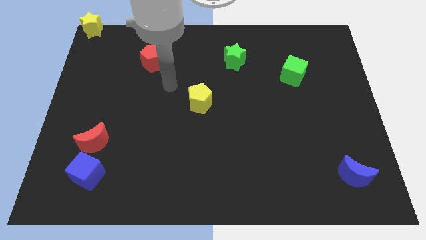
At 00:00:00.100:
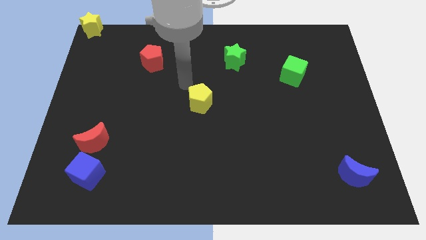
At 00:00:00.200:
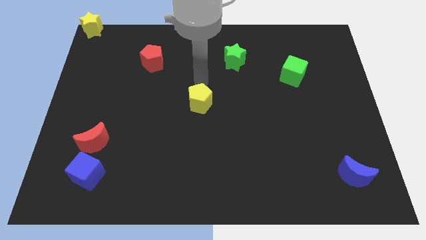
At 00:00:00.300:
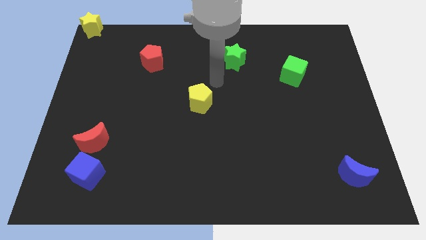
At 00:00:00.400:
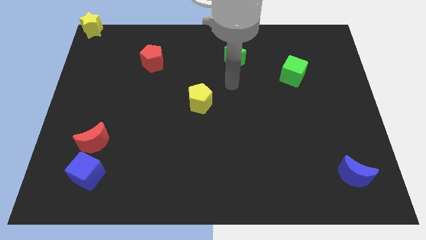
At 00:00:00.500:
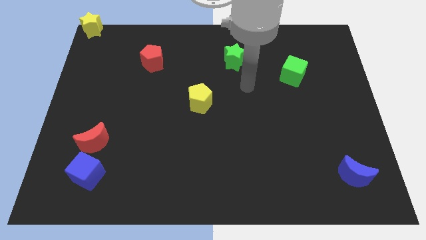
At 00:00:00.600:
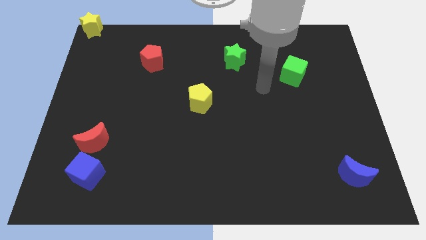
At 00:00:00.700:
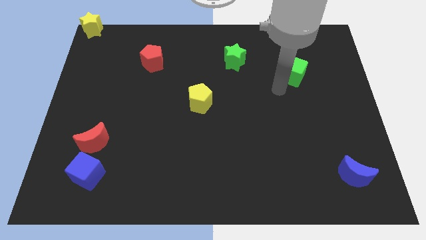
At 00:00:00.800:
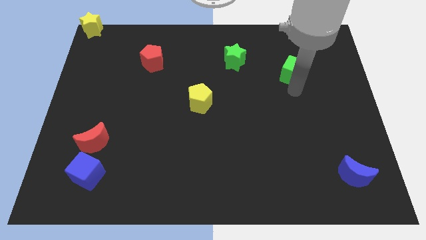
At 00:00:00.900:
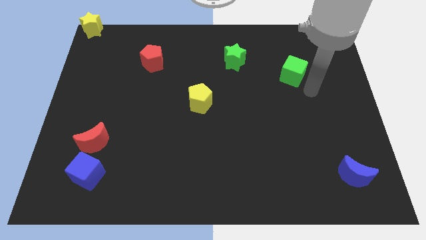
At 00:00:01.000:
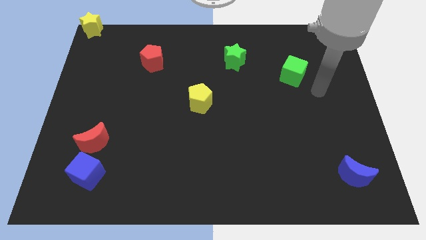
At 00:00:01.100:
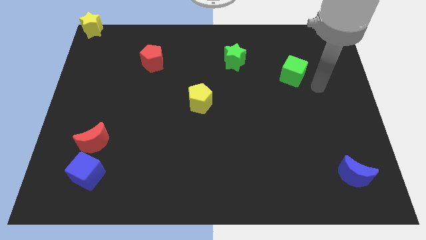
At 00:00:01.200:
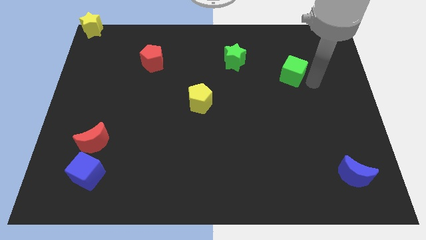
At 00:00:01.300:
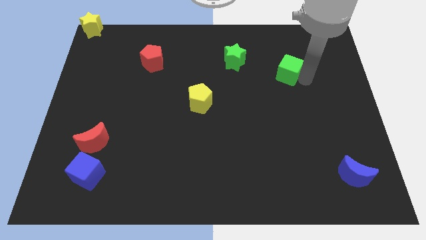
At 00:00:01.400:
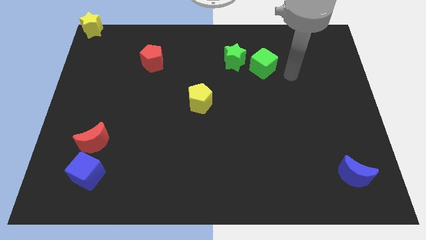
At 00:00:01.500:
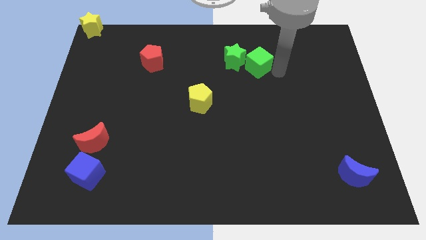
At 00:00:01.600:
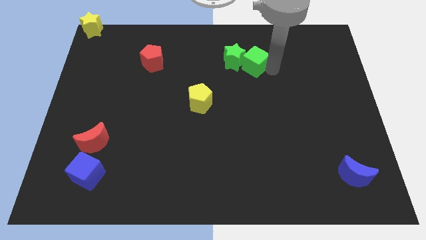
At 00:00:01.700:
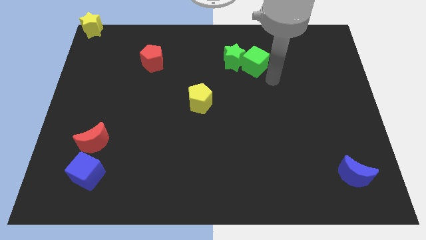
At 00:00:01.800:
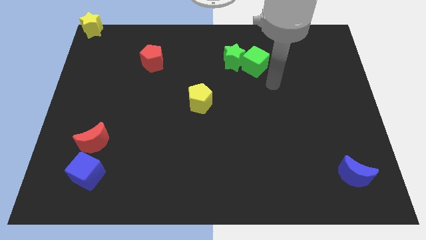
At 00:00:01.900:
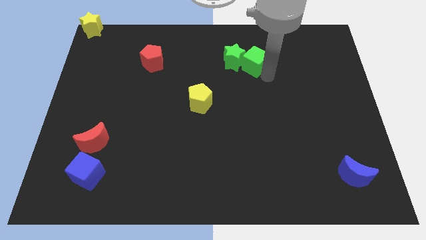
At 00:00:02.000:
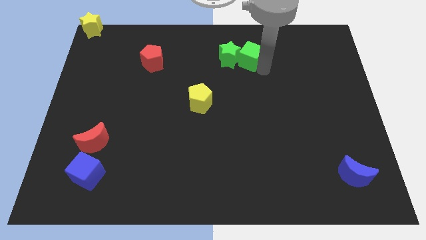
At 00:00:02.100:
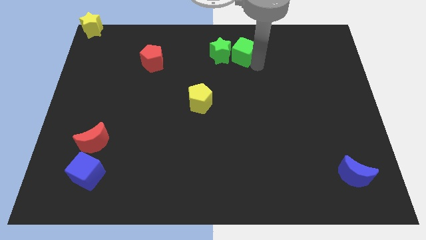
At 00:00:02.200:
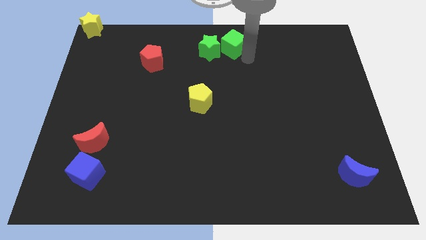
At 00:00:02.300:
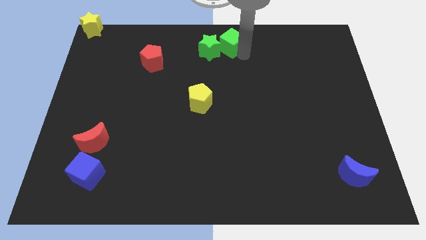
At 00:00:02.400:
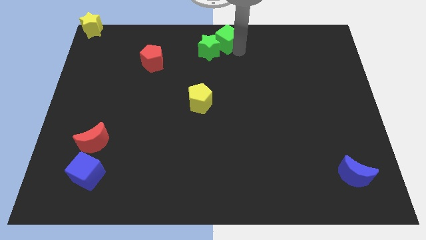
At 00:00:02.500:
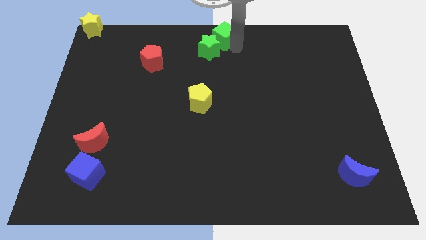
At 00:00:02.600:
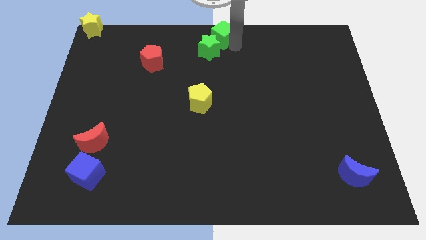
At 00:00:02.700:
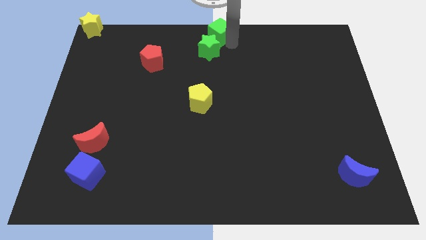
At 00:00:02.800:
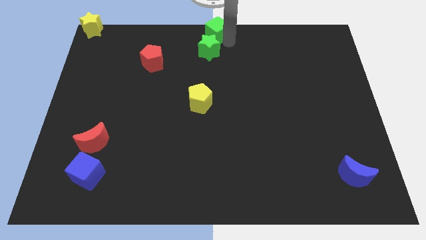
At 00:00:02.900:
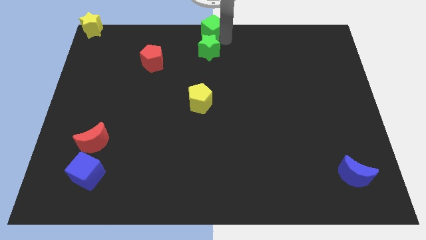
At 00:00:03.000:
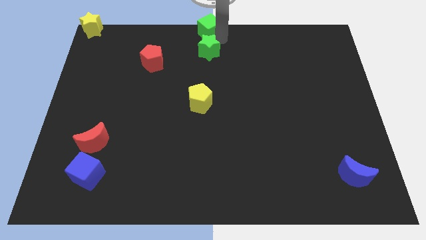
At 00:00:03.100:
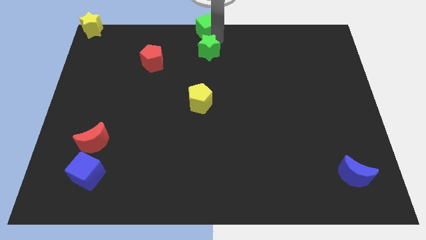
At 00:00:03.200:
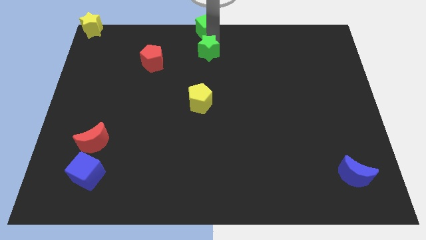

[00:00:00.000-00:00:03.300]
push the green cube at the top center

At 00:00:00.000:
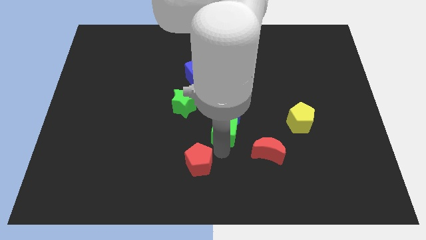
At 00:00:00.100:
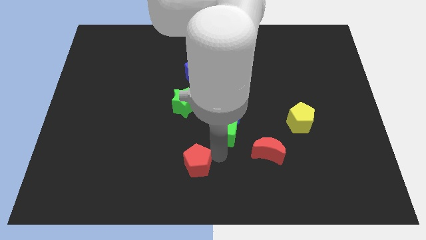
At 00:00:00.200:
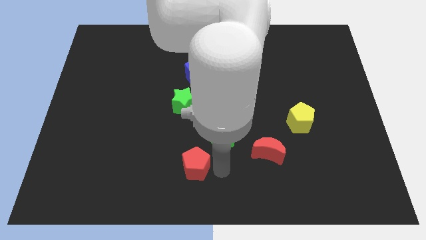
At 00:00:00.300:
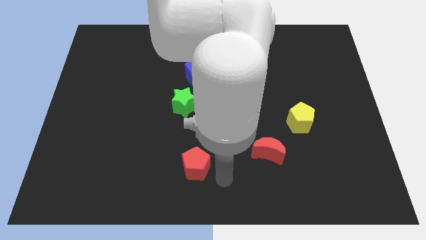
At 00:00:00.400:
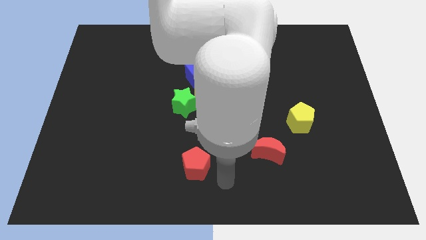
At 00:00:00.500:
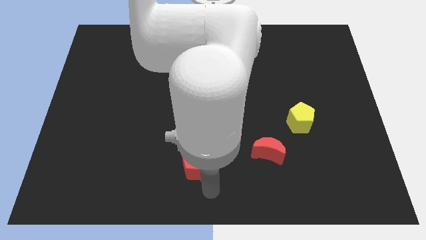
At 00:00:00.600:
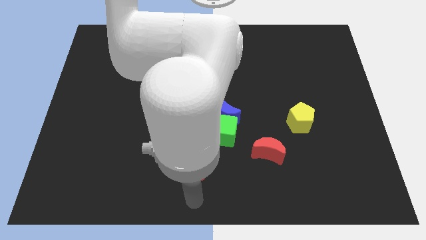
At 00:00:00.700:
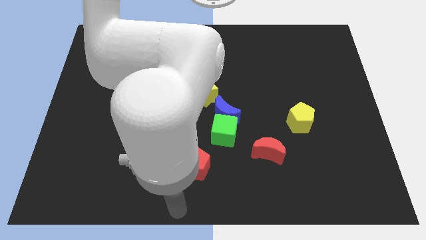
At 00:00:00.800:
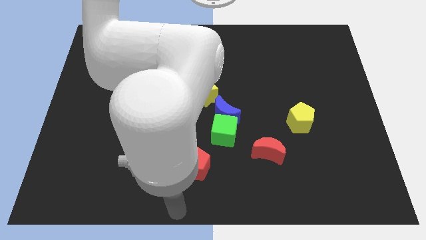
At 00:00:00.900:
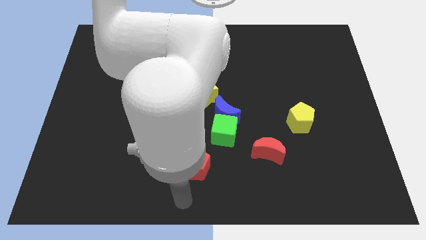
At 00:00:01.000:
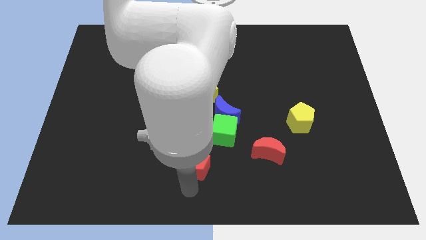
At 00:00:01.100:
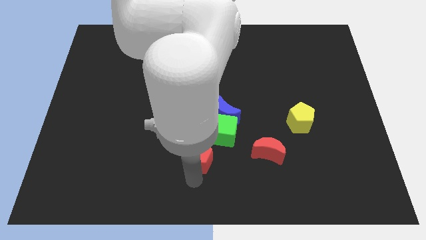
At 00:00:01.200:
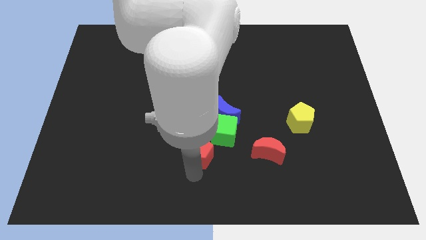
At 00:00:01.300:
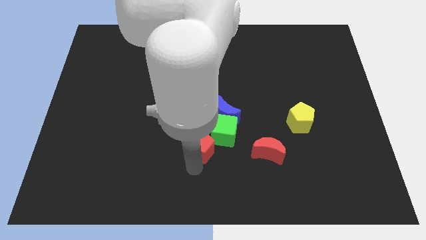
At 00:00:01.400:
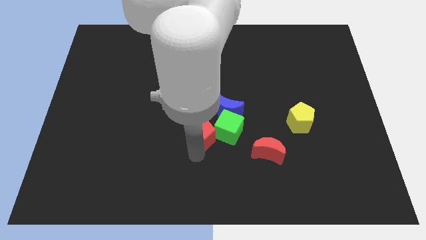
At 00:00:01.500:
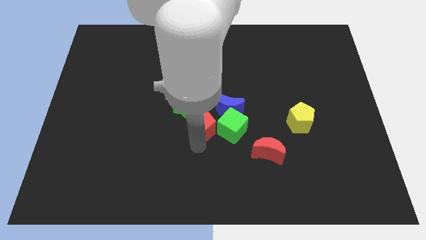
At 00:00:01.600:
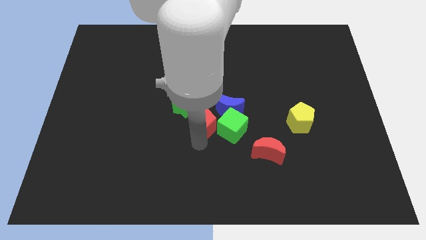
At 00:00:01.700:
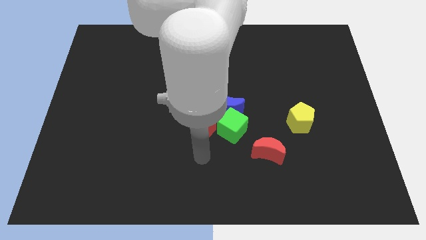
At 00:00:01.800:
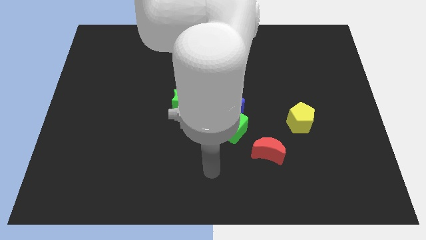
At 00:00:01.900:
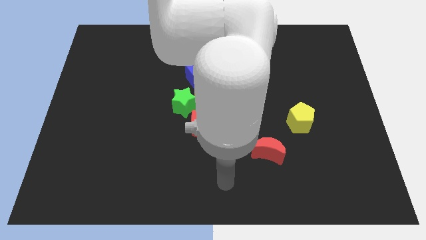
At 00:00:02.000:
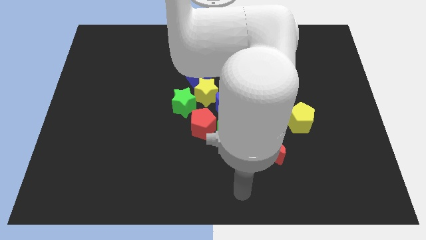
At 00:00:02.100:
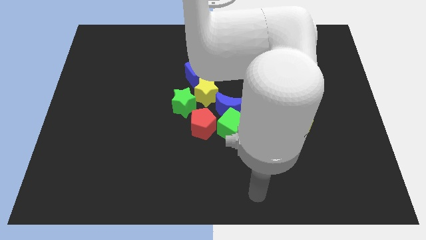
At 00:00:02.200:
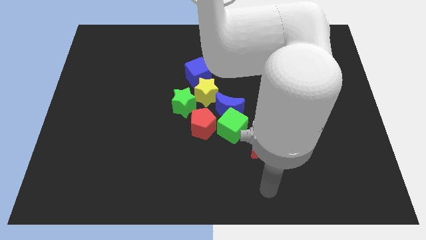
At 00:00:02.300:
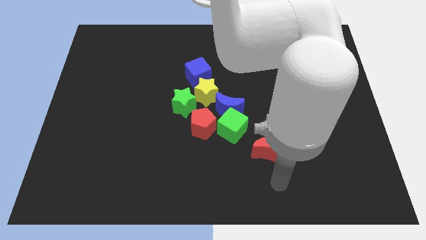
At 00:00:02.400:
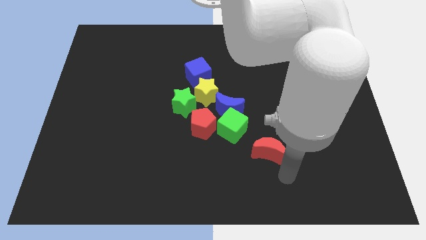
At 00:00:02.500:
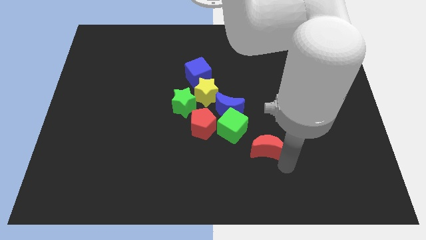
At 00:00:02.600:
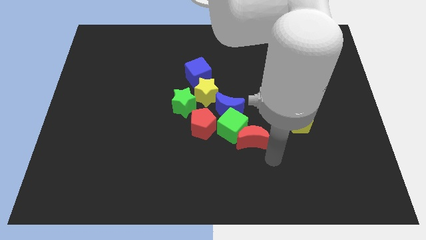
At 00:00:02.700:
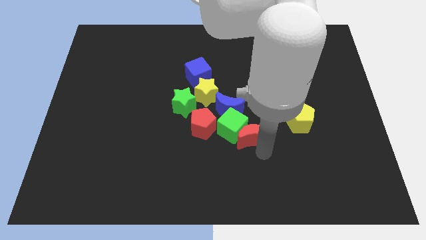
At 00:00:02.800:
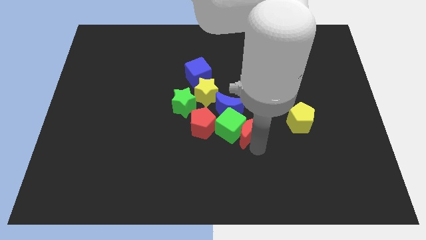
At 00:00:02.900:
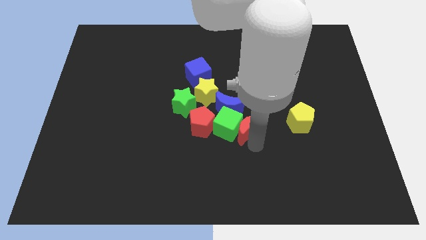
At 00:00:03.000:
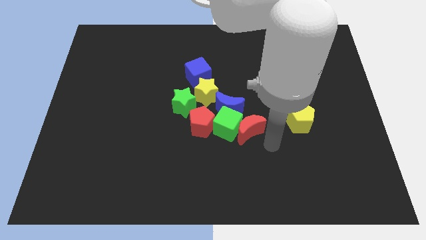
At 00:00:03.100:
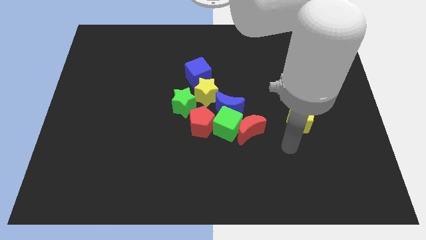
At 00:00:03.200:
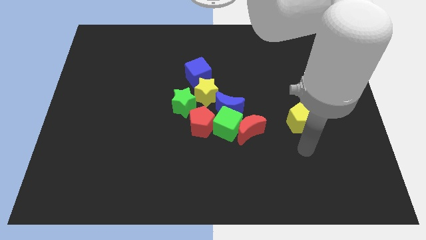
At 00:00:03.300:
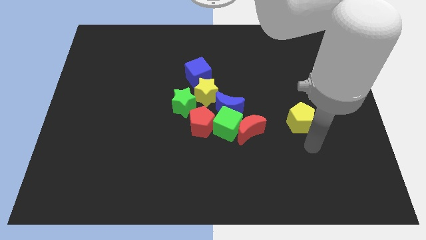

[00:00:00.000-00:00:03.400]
move the red blocks to the center of the board

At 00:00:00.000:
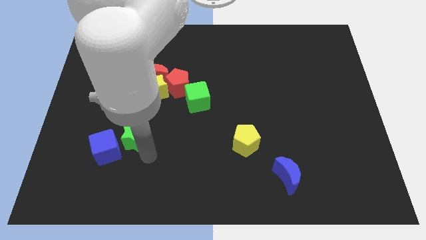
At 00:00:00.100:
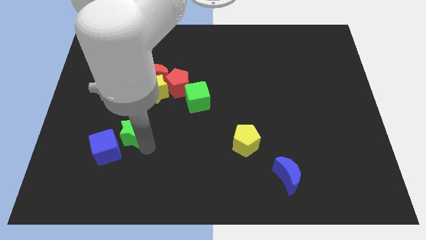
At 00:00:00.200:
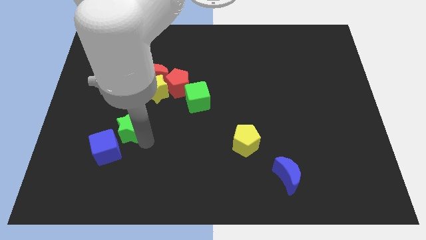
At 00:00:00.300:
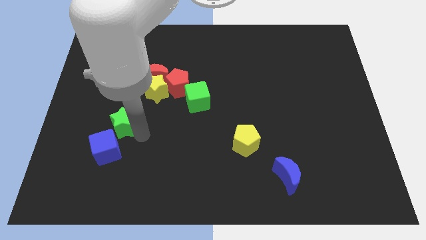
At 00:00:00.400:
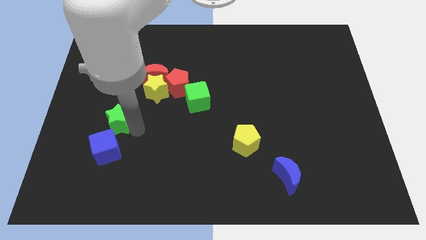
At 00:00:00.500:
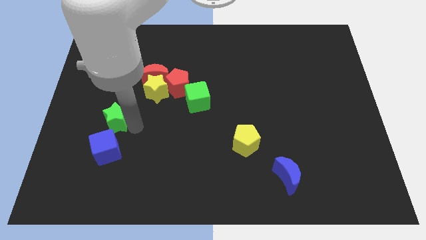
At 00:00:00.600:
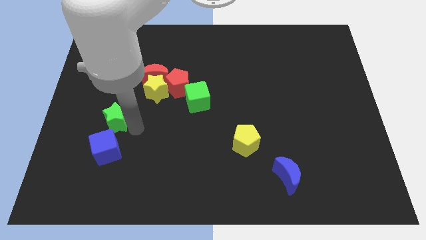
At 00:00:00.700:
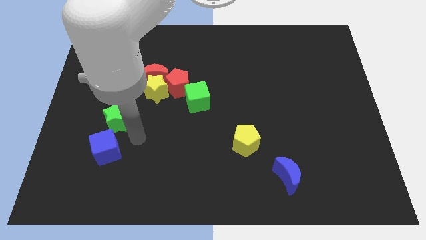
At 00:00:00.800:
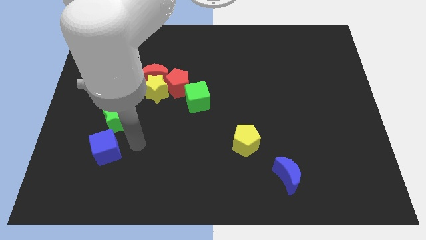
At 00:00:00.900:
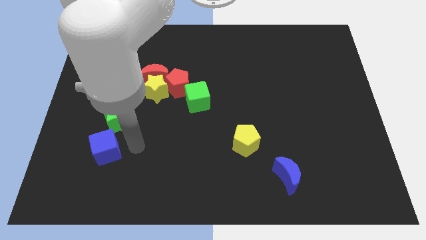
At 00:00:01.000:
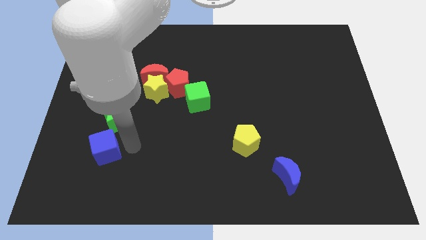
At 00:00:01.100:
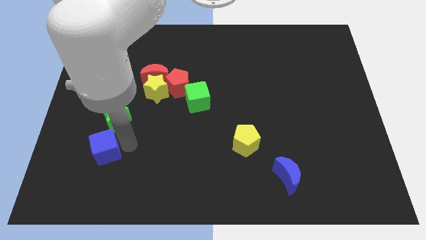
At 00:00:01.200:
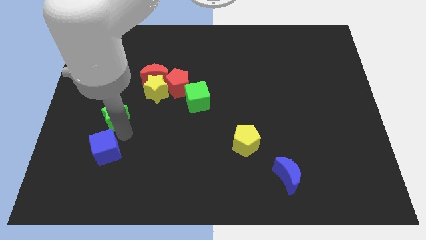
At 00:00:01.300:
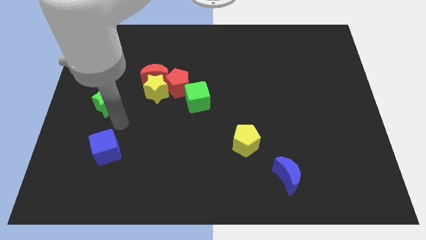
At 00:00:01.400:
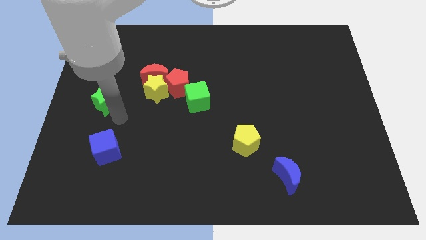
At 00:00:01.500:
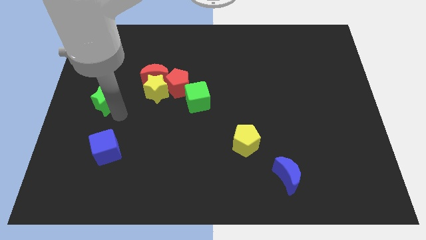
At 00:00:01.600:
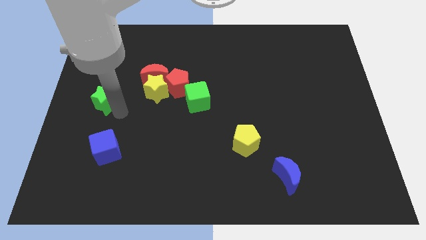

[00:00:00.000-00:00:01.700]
move green star above the blue cube

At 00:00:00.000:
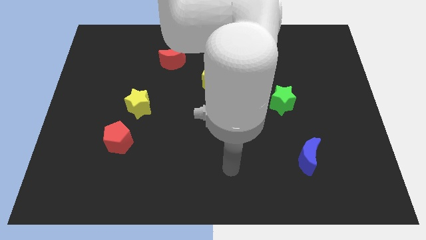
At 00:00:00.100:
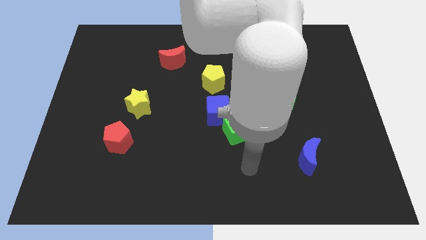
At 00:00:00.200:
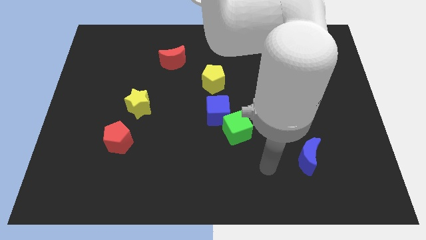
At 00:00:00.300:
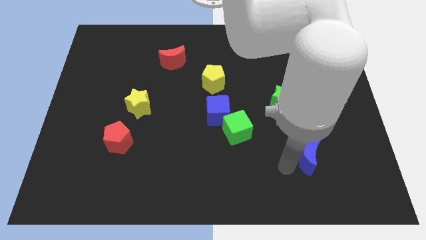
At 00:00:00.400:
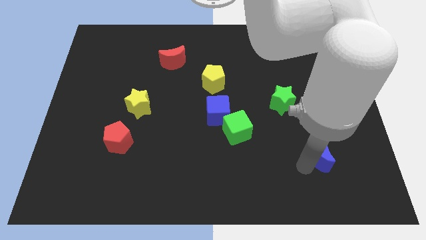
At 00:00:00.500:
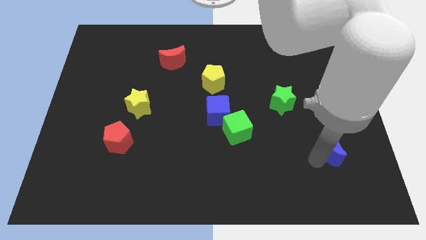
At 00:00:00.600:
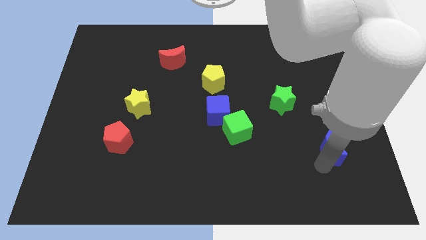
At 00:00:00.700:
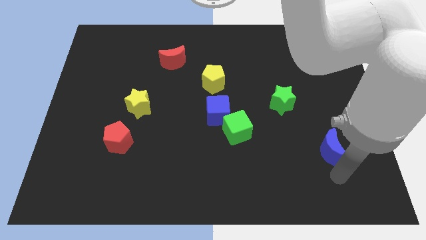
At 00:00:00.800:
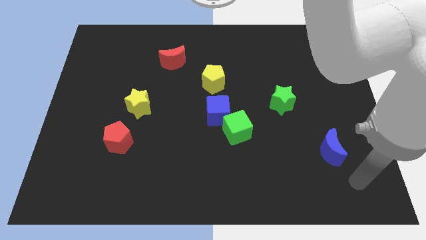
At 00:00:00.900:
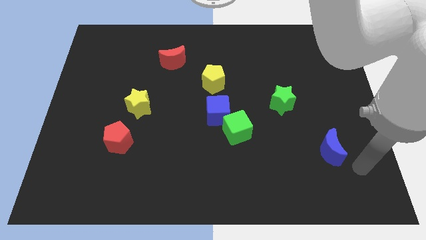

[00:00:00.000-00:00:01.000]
place blue moon to the right center
